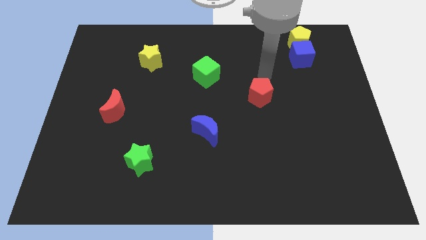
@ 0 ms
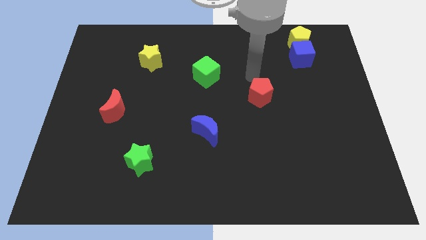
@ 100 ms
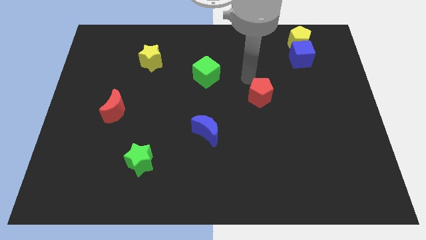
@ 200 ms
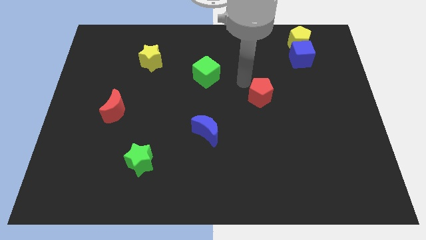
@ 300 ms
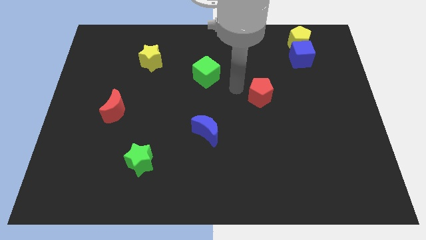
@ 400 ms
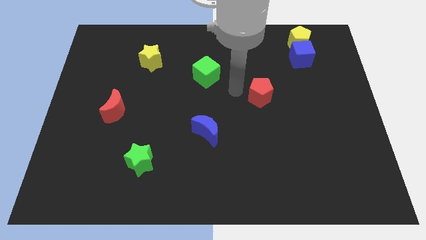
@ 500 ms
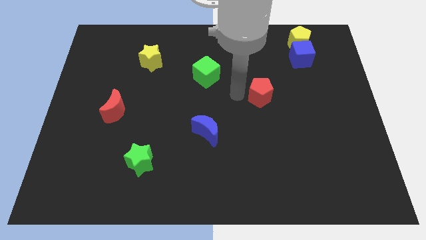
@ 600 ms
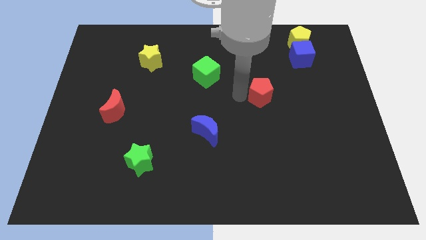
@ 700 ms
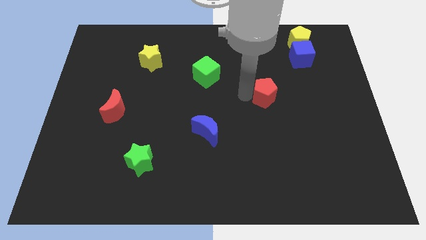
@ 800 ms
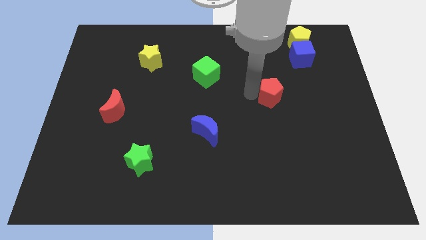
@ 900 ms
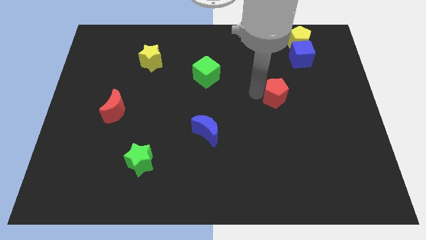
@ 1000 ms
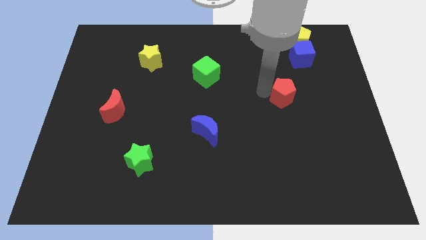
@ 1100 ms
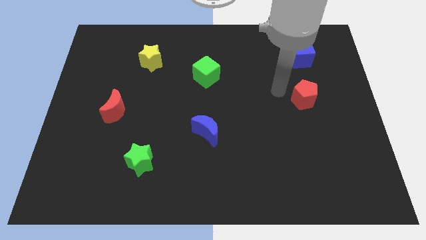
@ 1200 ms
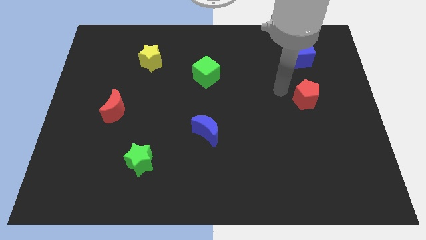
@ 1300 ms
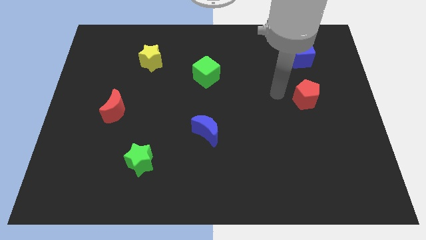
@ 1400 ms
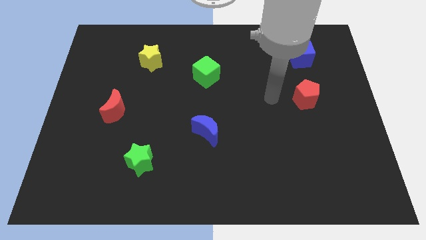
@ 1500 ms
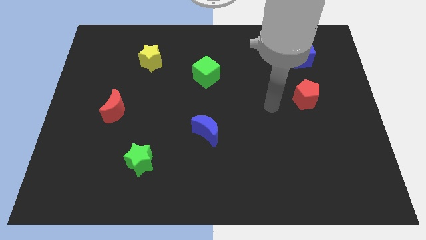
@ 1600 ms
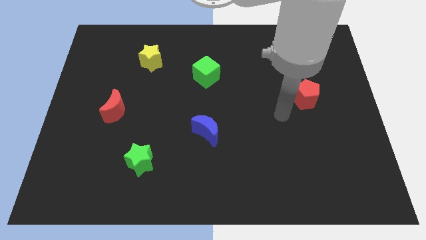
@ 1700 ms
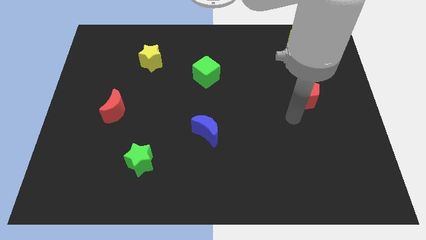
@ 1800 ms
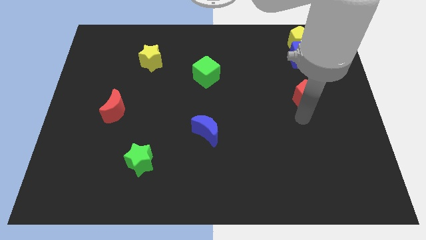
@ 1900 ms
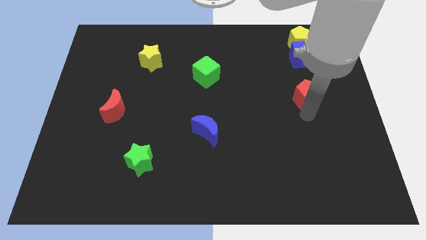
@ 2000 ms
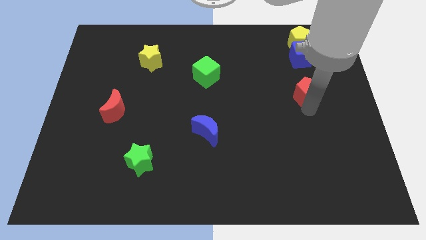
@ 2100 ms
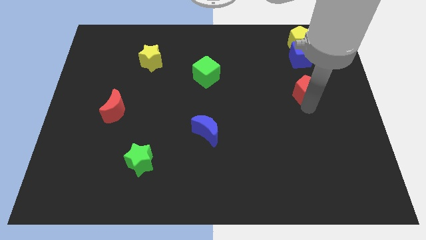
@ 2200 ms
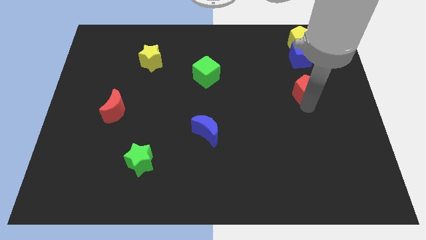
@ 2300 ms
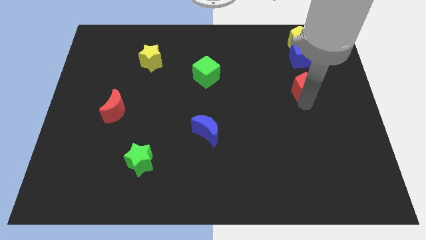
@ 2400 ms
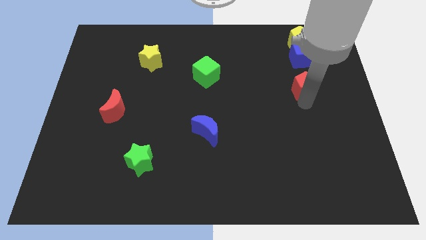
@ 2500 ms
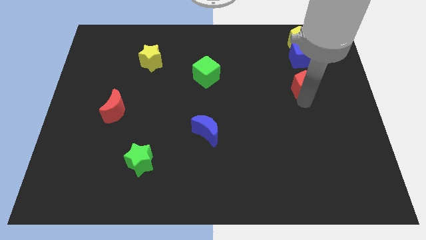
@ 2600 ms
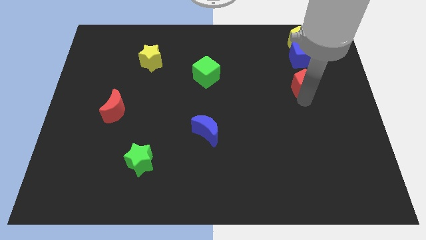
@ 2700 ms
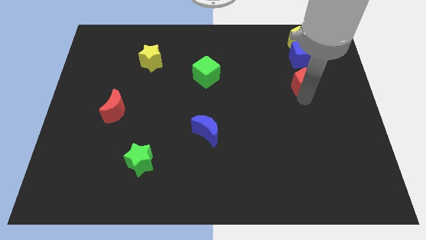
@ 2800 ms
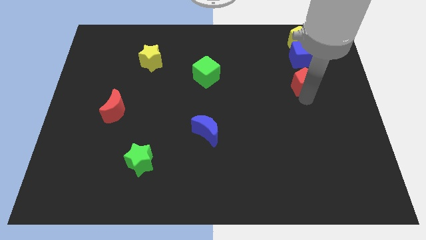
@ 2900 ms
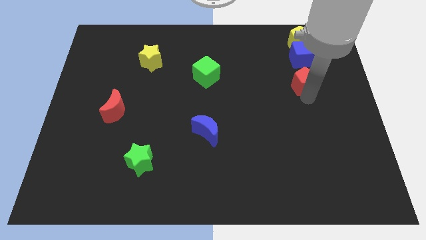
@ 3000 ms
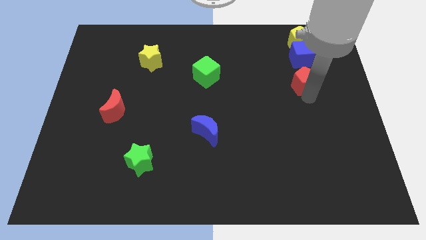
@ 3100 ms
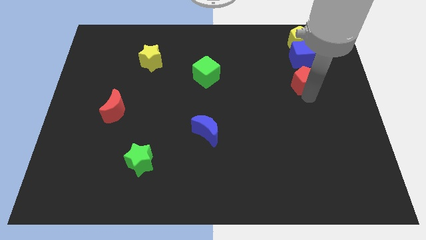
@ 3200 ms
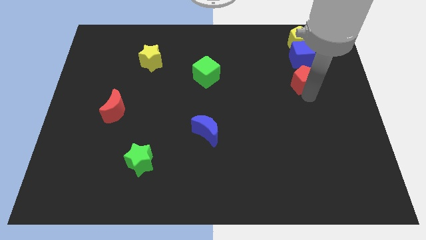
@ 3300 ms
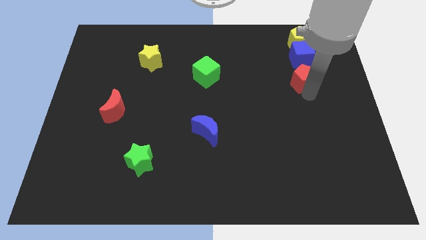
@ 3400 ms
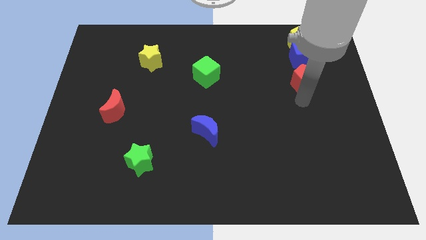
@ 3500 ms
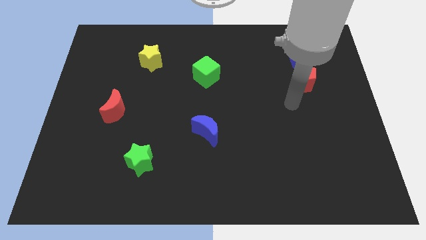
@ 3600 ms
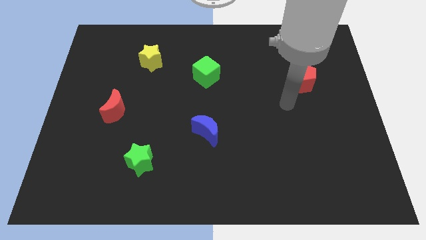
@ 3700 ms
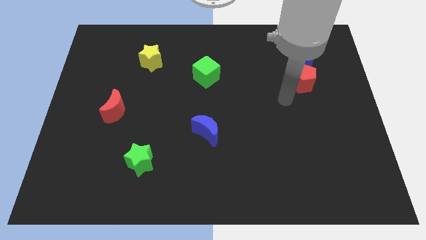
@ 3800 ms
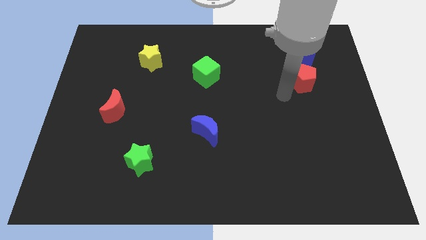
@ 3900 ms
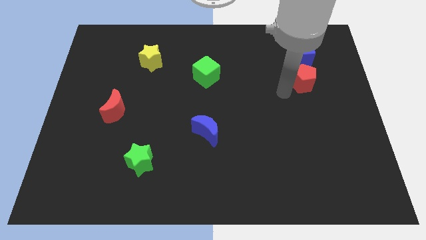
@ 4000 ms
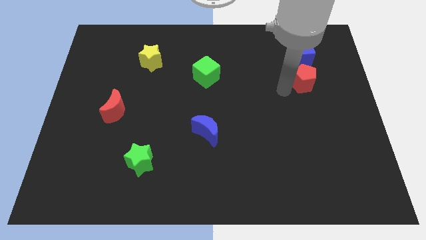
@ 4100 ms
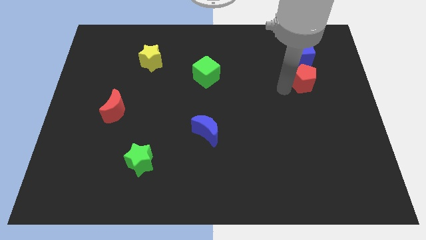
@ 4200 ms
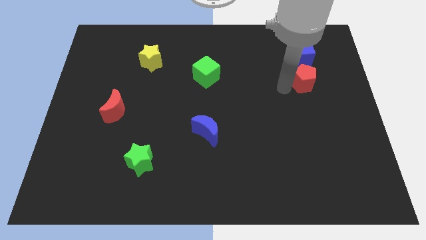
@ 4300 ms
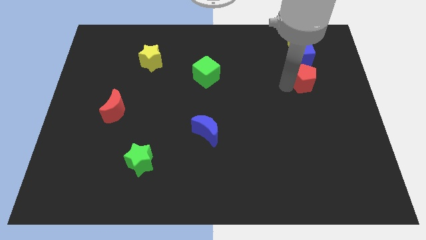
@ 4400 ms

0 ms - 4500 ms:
place red pentagon below blue cube

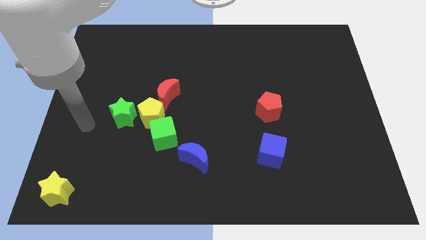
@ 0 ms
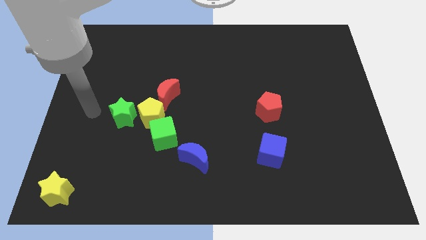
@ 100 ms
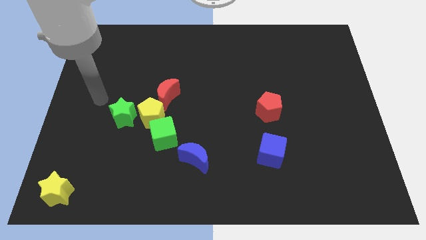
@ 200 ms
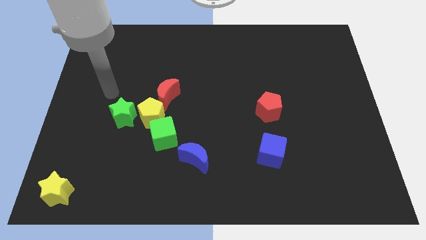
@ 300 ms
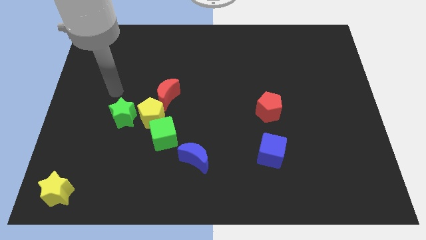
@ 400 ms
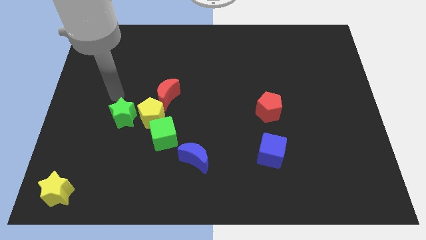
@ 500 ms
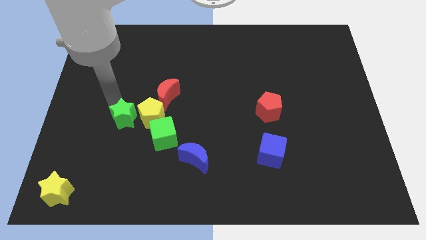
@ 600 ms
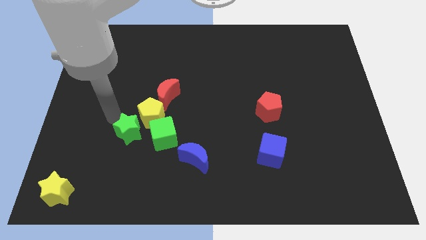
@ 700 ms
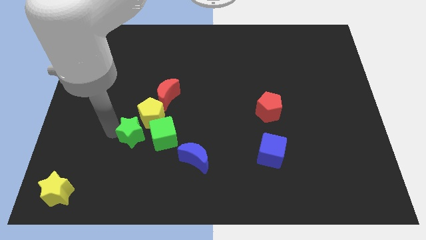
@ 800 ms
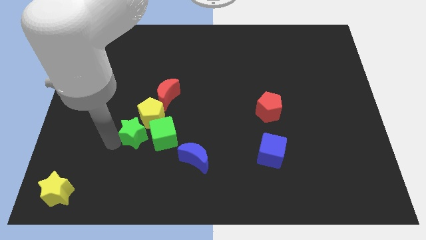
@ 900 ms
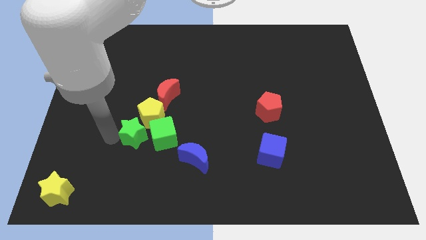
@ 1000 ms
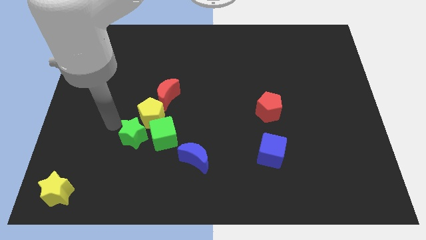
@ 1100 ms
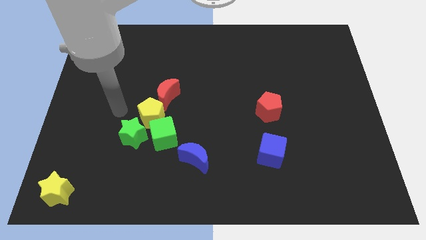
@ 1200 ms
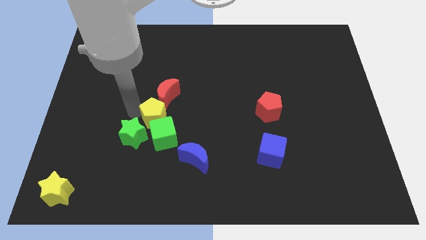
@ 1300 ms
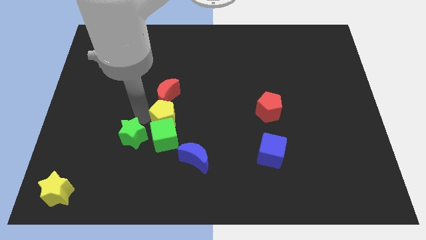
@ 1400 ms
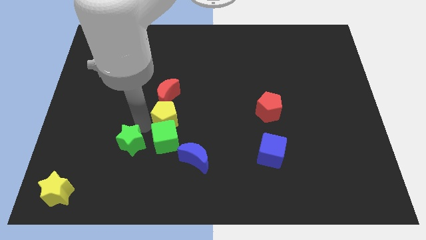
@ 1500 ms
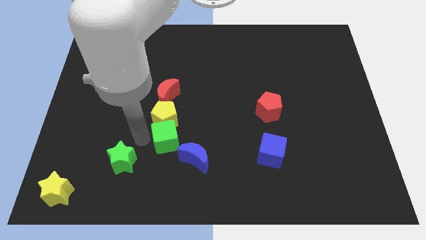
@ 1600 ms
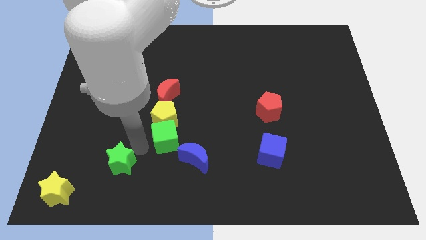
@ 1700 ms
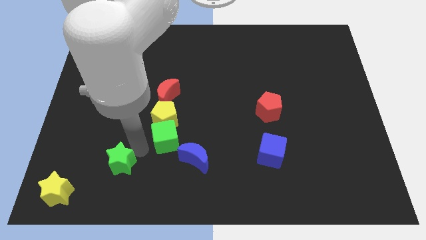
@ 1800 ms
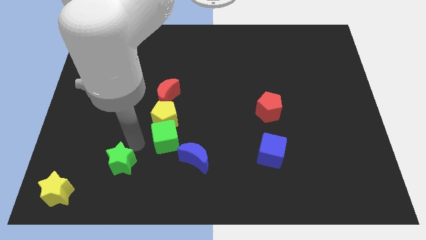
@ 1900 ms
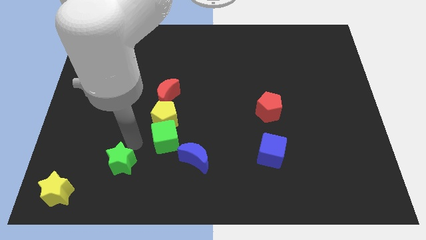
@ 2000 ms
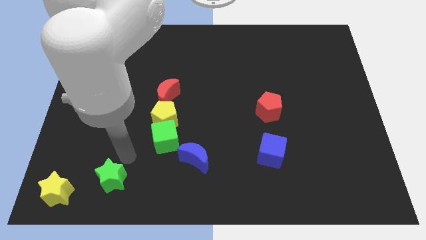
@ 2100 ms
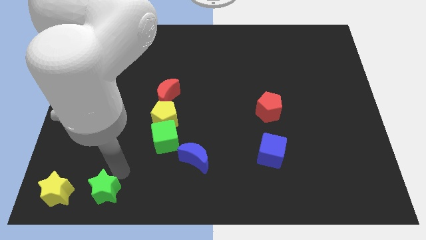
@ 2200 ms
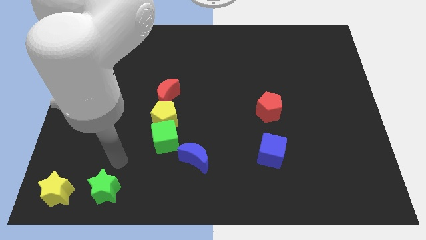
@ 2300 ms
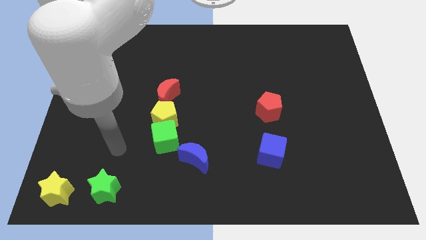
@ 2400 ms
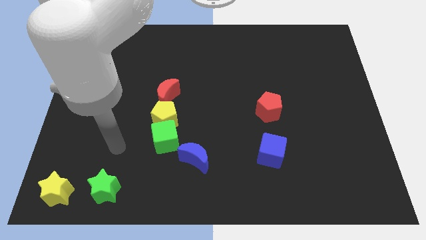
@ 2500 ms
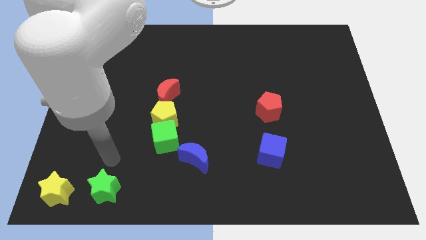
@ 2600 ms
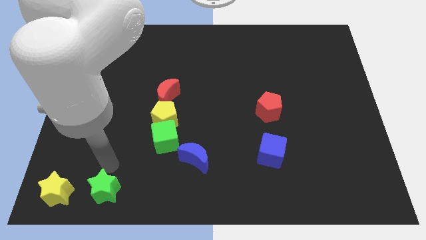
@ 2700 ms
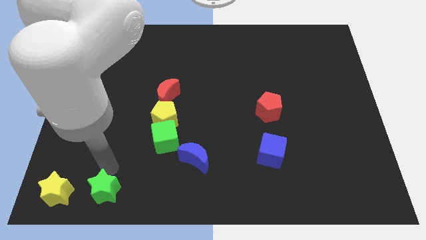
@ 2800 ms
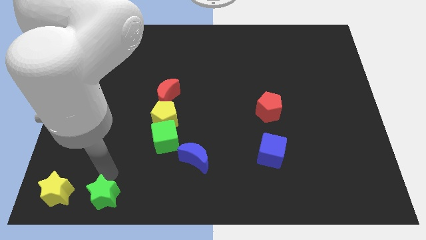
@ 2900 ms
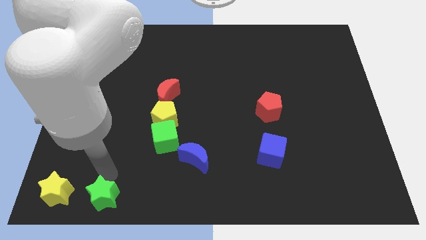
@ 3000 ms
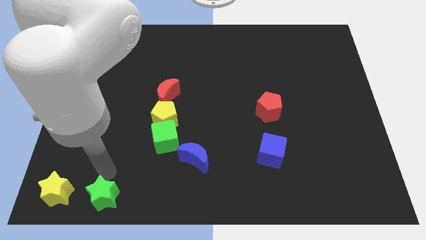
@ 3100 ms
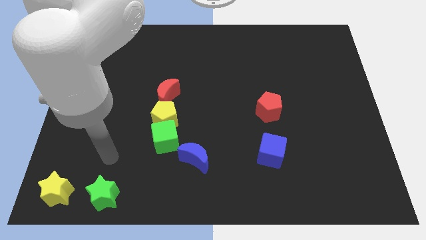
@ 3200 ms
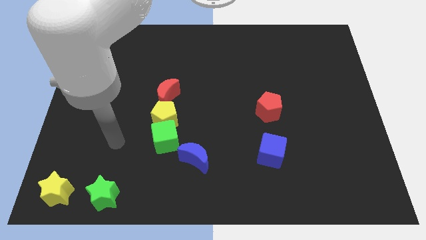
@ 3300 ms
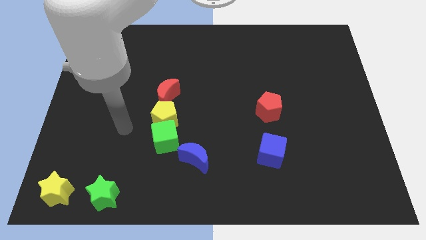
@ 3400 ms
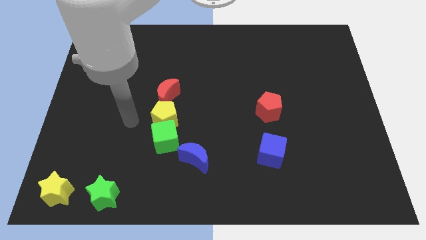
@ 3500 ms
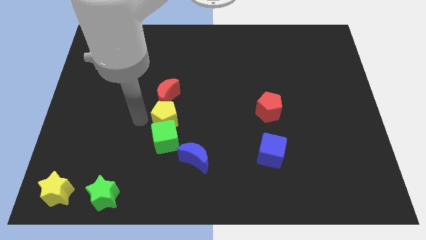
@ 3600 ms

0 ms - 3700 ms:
put green star adjacent to yellow star

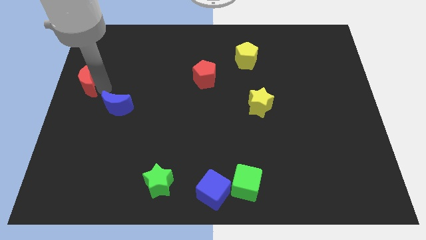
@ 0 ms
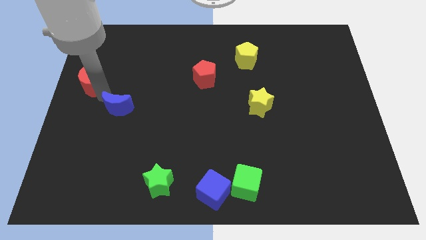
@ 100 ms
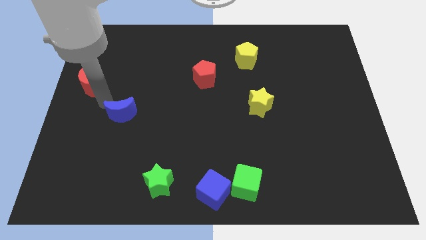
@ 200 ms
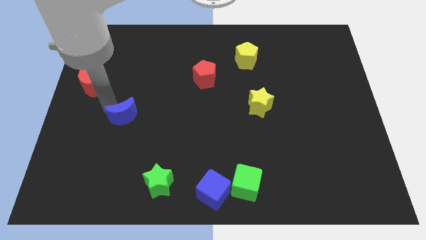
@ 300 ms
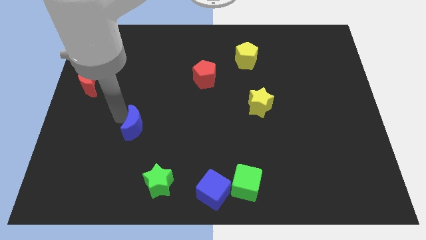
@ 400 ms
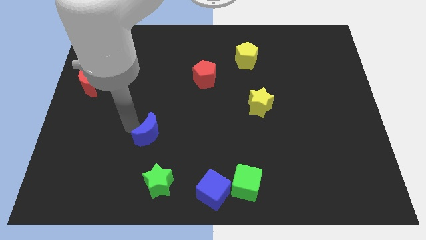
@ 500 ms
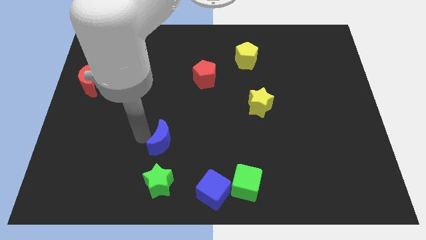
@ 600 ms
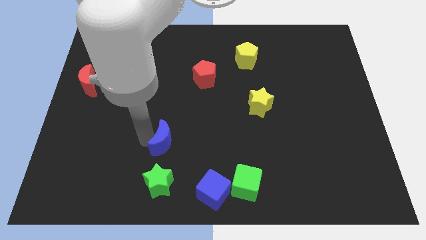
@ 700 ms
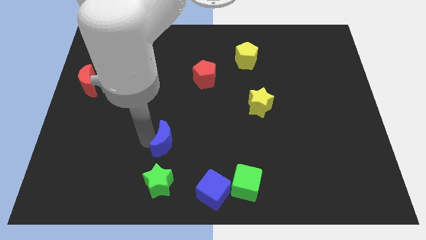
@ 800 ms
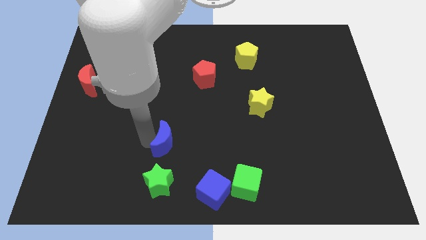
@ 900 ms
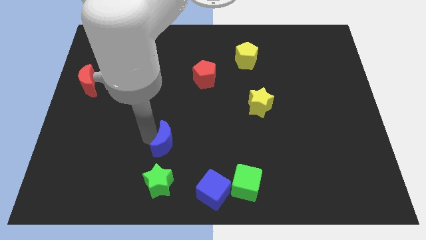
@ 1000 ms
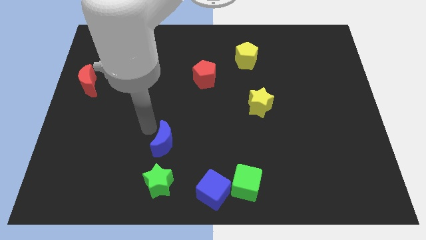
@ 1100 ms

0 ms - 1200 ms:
move the blue crescent vertically to the top of the green star
